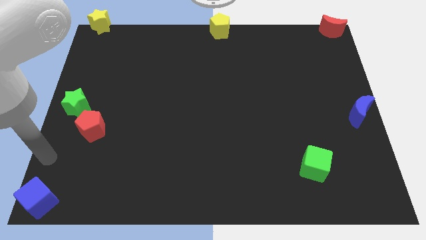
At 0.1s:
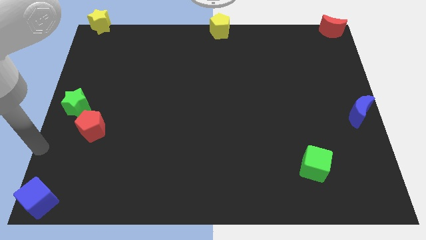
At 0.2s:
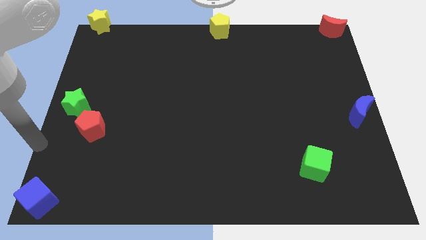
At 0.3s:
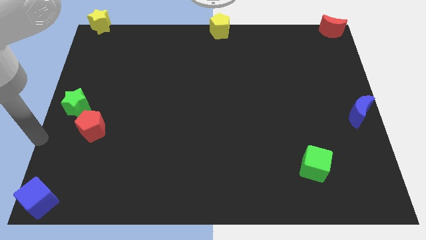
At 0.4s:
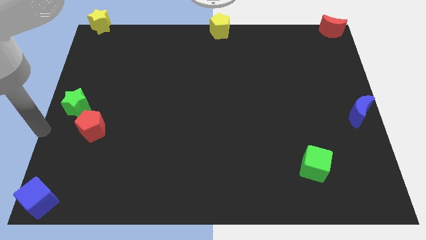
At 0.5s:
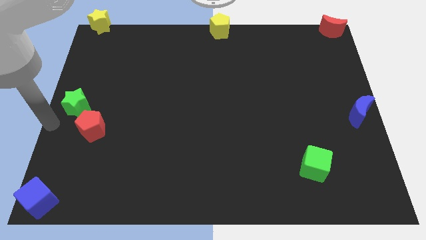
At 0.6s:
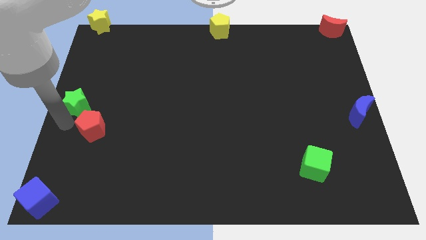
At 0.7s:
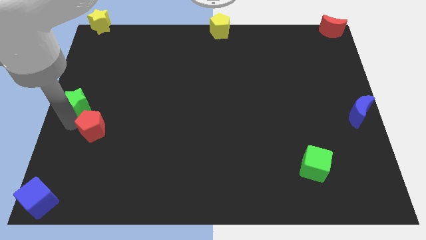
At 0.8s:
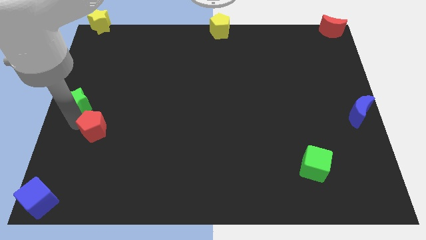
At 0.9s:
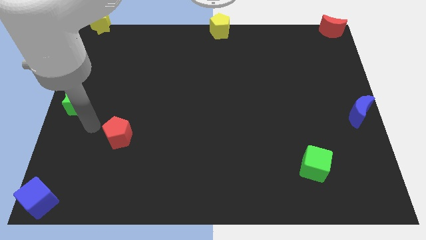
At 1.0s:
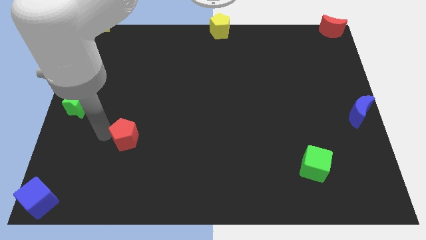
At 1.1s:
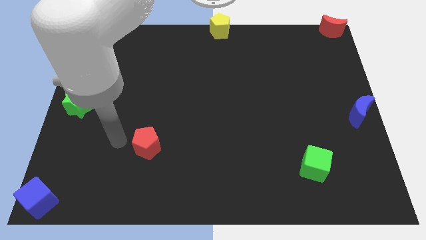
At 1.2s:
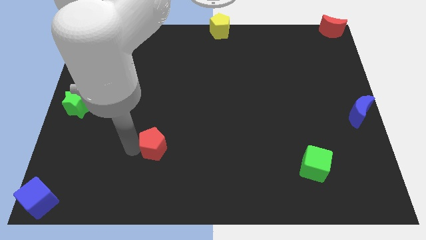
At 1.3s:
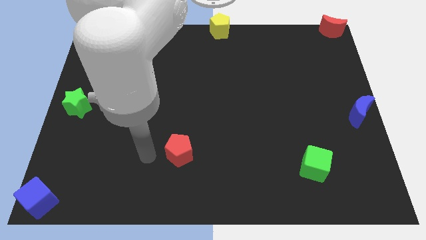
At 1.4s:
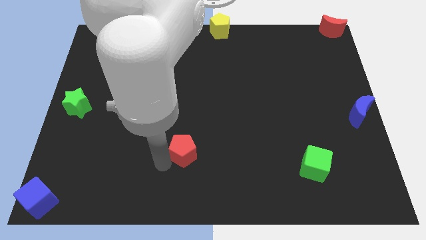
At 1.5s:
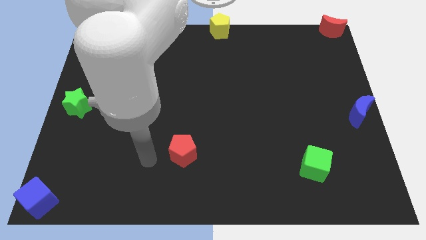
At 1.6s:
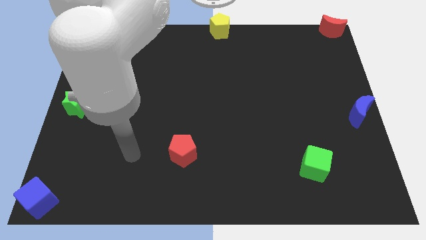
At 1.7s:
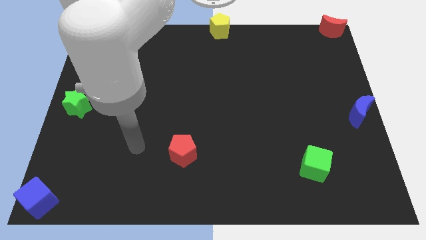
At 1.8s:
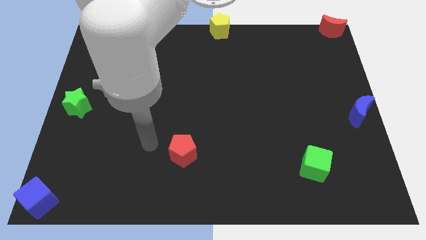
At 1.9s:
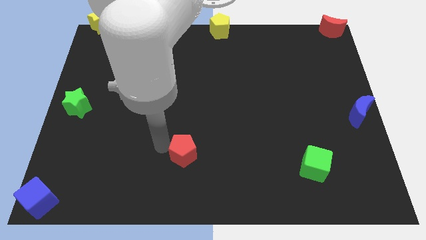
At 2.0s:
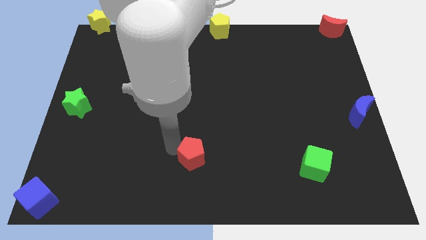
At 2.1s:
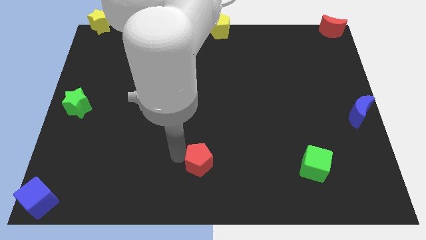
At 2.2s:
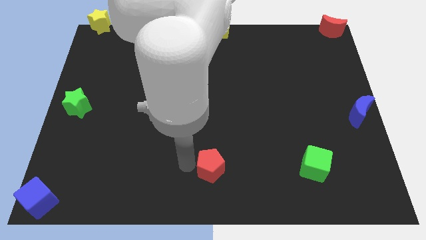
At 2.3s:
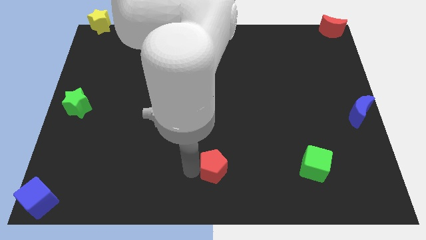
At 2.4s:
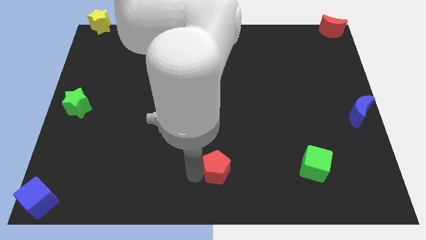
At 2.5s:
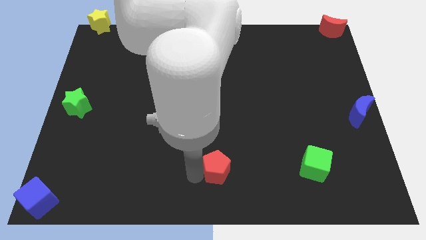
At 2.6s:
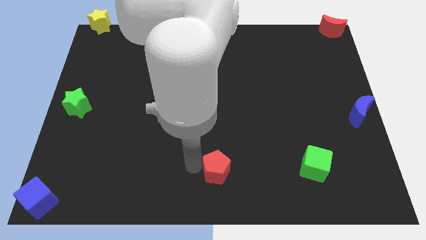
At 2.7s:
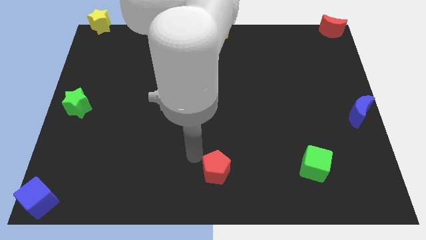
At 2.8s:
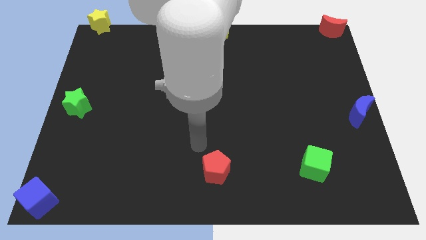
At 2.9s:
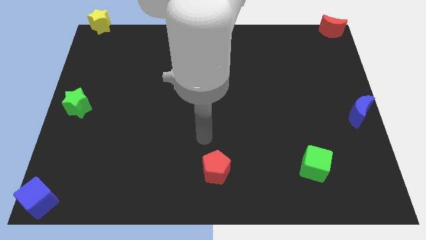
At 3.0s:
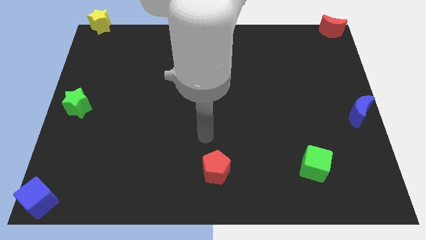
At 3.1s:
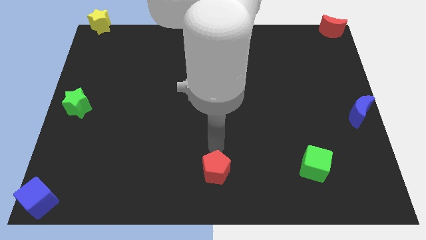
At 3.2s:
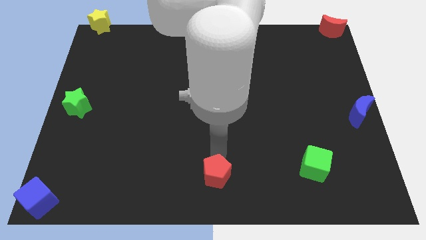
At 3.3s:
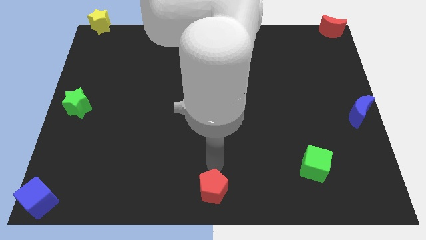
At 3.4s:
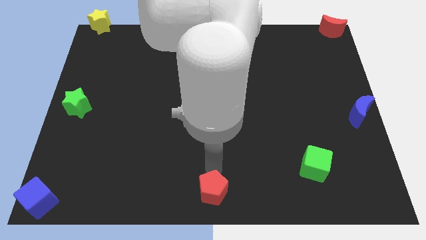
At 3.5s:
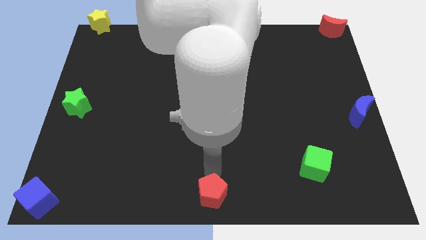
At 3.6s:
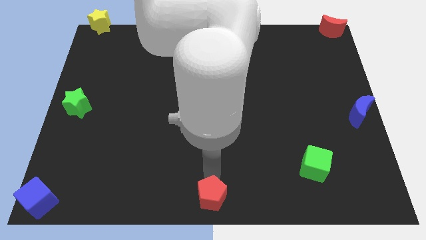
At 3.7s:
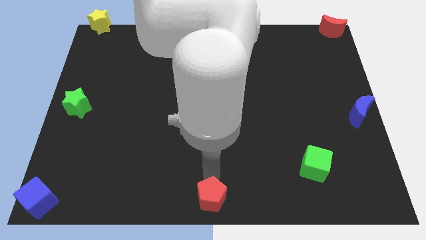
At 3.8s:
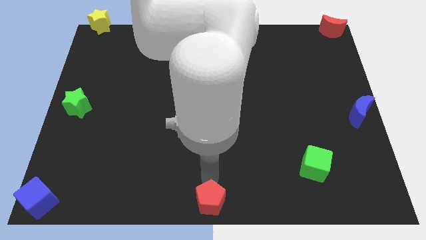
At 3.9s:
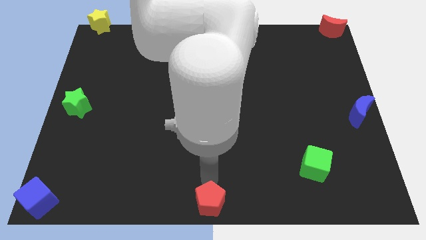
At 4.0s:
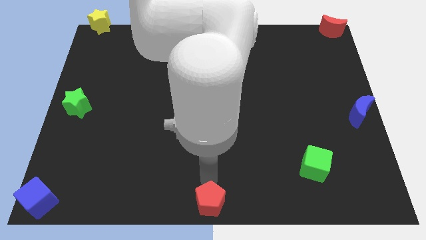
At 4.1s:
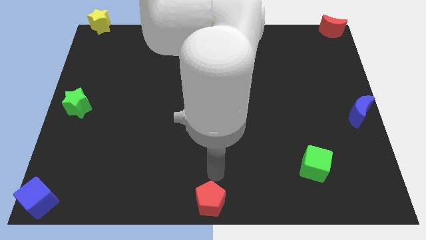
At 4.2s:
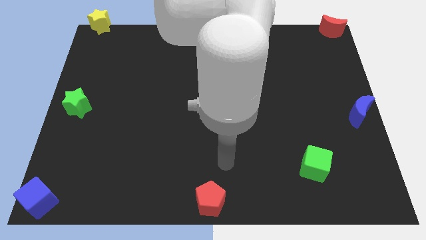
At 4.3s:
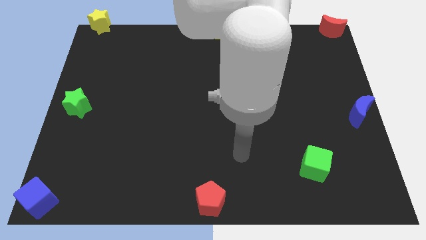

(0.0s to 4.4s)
place red pentagon at the center bottom of the board

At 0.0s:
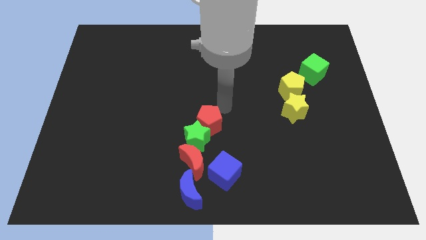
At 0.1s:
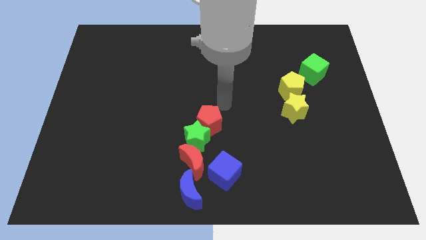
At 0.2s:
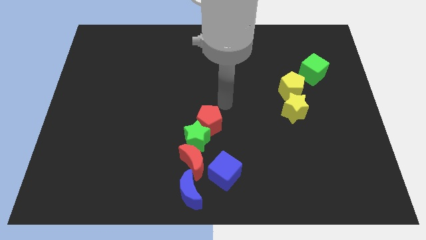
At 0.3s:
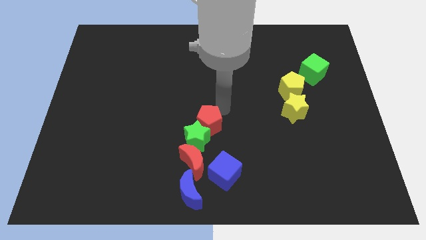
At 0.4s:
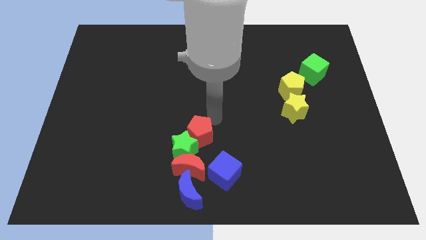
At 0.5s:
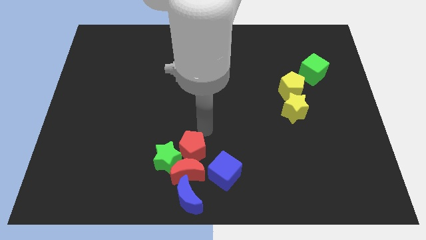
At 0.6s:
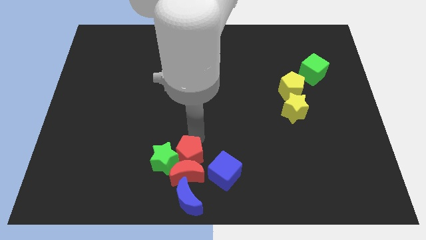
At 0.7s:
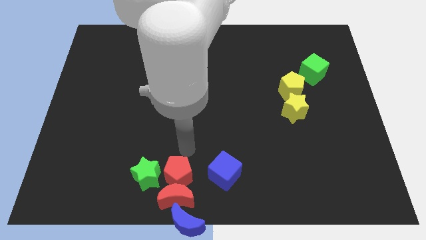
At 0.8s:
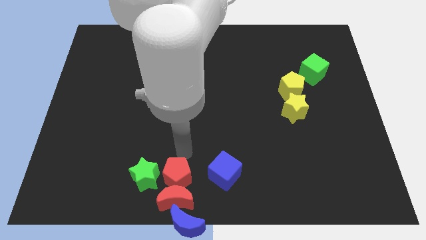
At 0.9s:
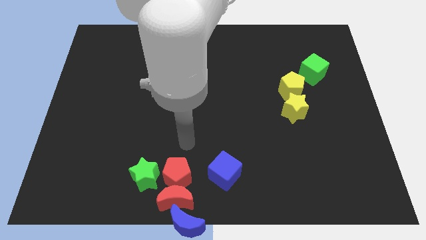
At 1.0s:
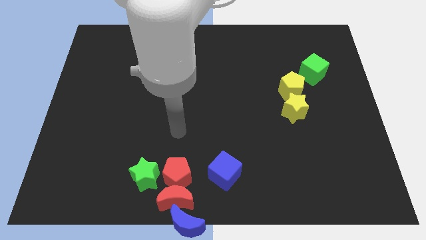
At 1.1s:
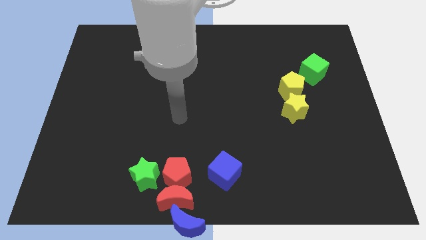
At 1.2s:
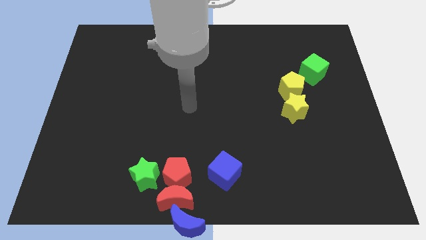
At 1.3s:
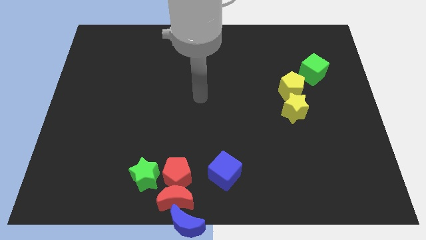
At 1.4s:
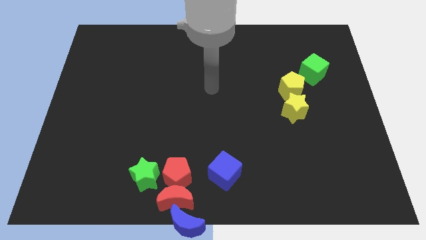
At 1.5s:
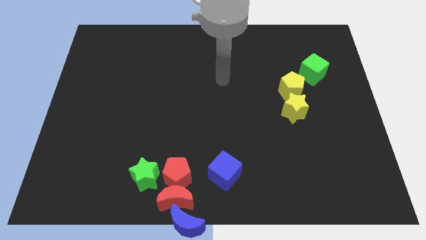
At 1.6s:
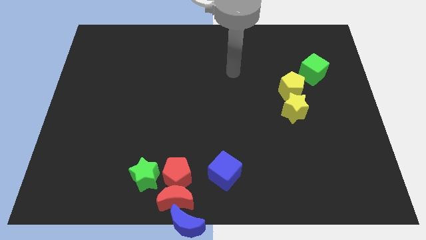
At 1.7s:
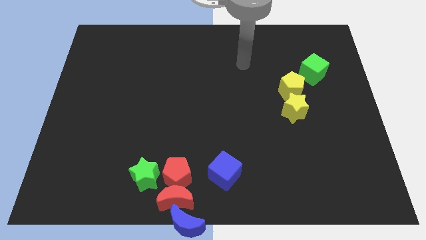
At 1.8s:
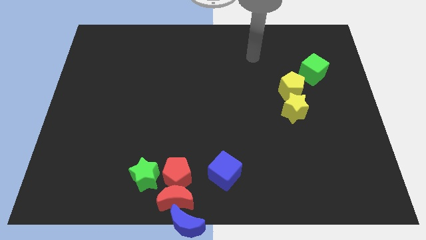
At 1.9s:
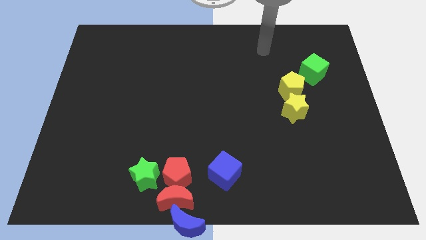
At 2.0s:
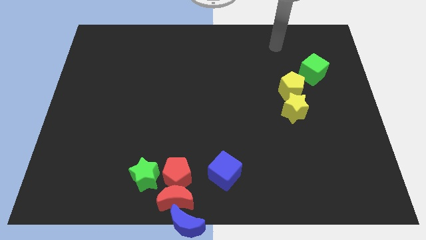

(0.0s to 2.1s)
move the red pentagon towards the bottom center

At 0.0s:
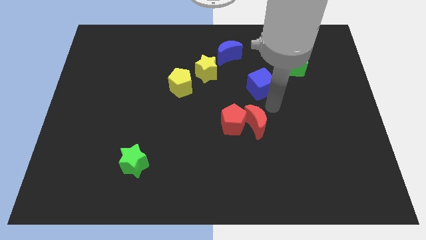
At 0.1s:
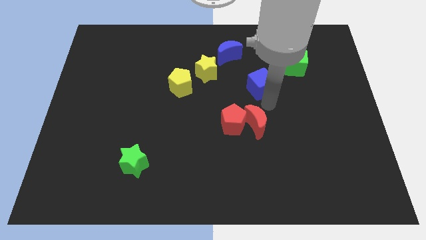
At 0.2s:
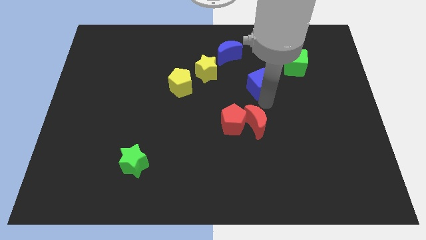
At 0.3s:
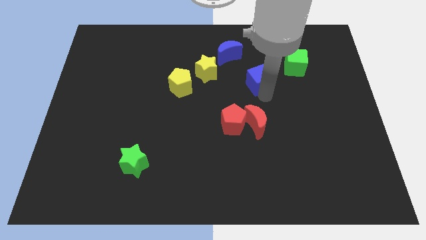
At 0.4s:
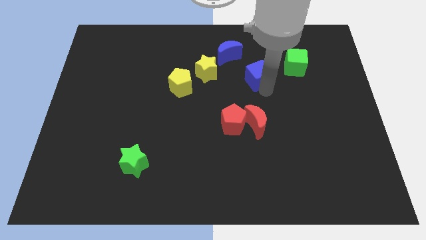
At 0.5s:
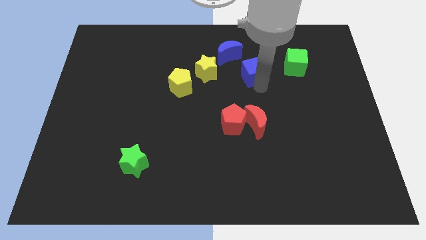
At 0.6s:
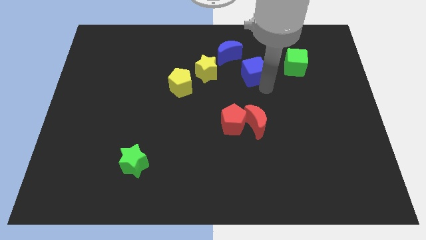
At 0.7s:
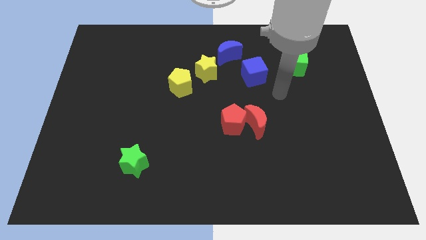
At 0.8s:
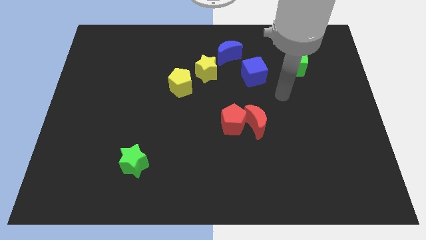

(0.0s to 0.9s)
place the blue block diagonally at the bottom right of the blue moon

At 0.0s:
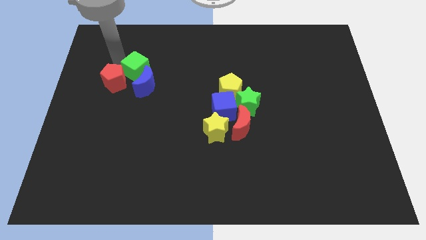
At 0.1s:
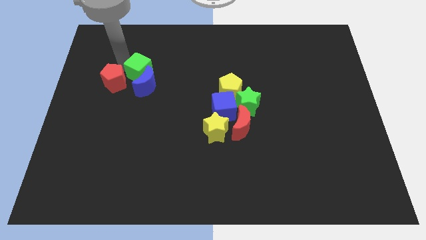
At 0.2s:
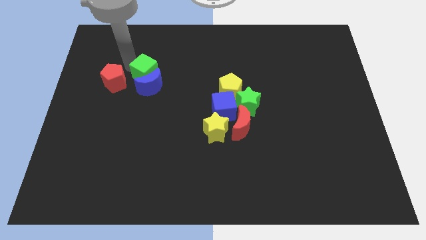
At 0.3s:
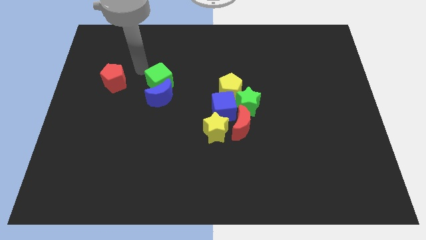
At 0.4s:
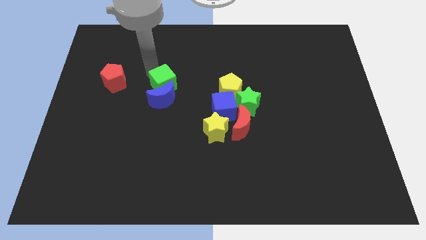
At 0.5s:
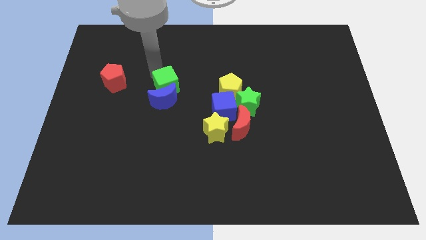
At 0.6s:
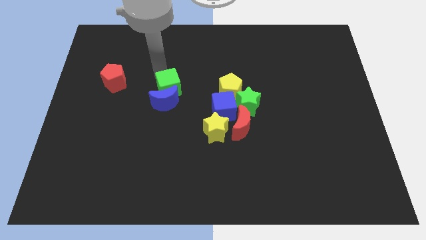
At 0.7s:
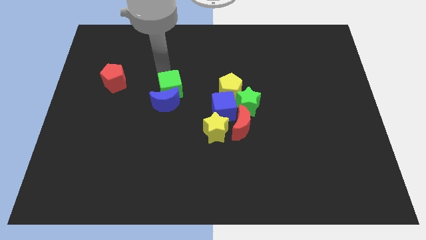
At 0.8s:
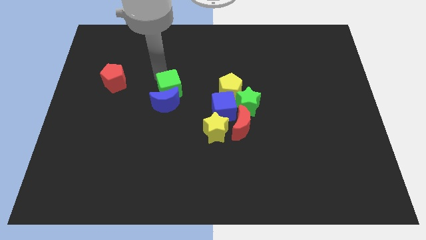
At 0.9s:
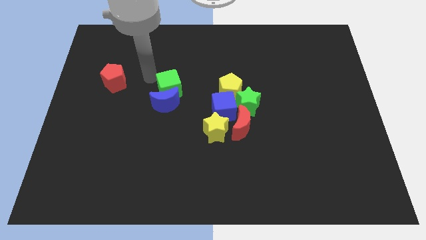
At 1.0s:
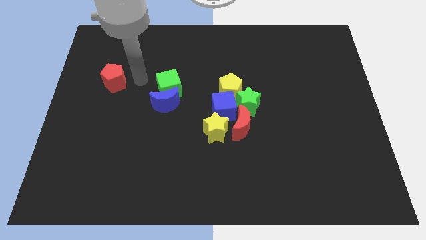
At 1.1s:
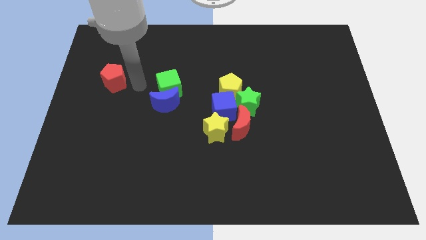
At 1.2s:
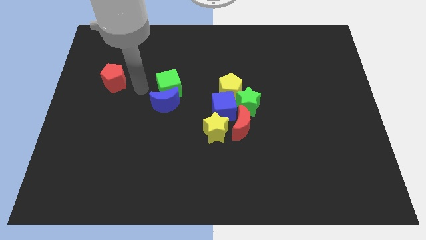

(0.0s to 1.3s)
drag the green cube slightly to the right

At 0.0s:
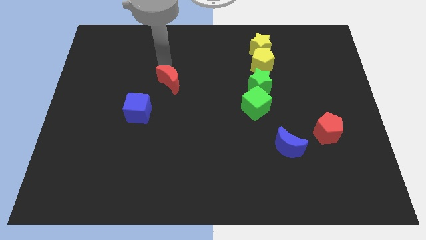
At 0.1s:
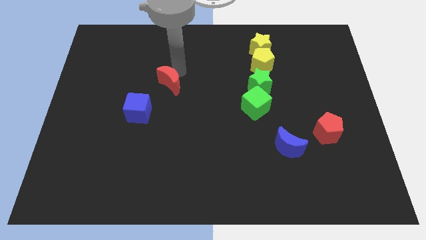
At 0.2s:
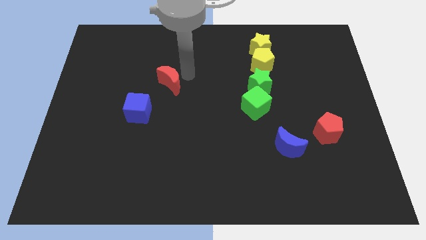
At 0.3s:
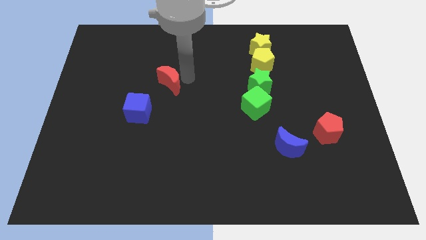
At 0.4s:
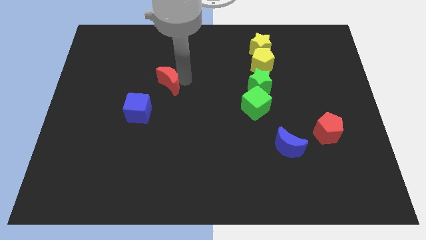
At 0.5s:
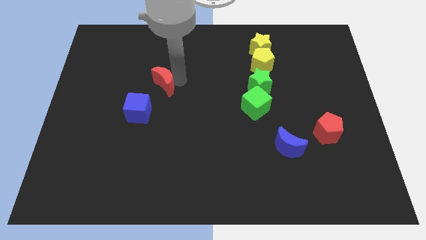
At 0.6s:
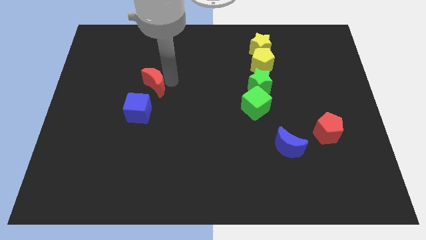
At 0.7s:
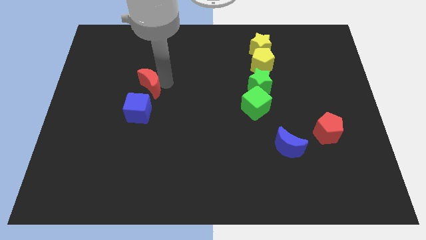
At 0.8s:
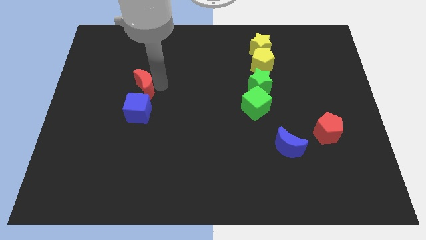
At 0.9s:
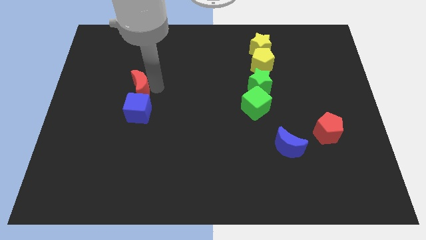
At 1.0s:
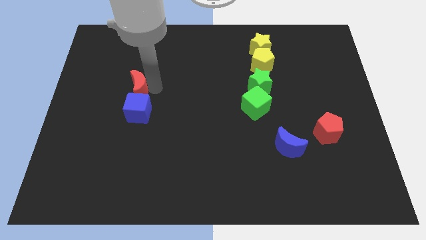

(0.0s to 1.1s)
put the red moon at the top of blue cube
